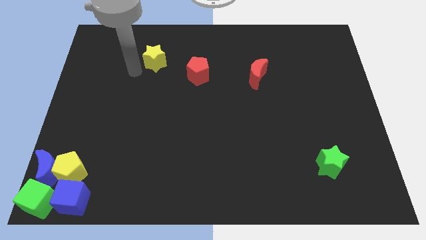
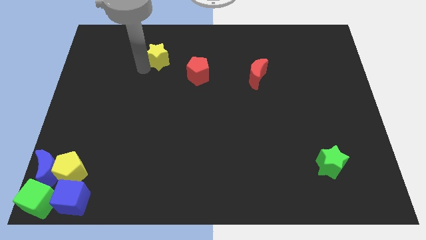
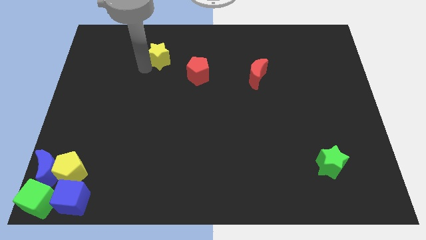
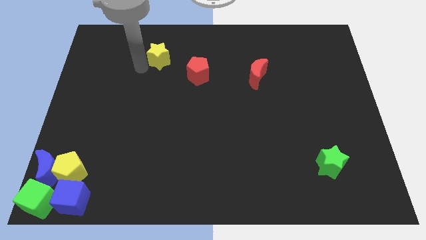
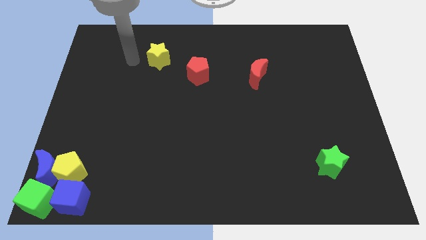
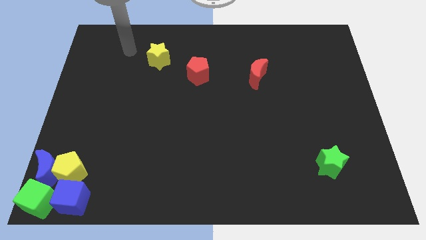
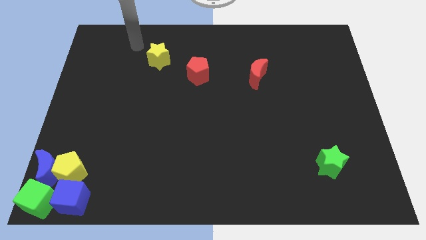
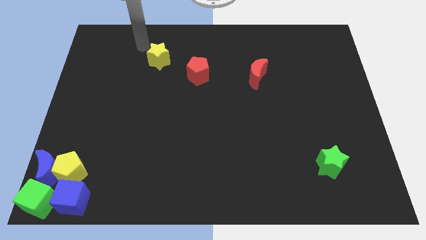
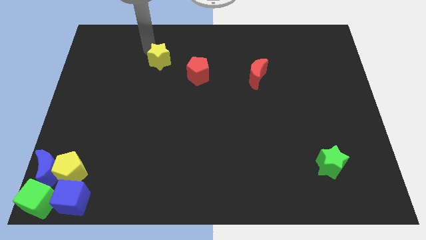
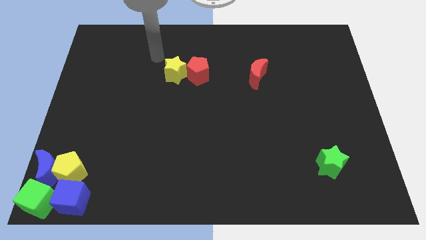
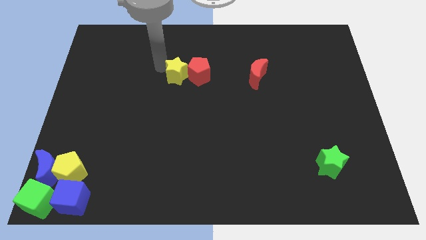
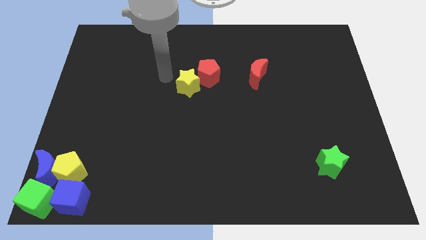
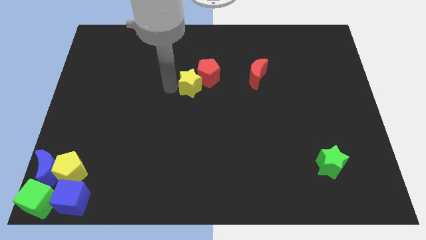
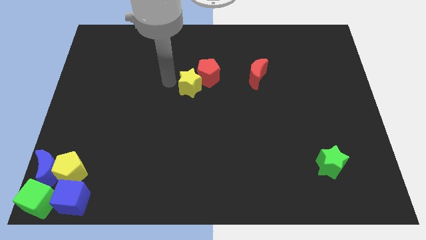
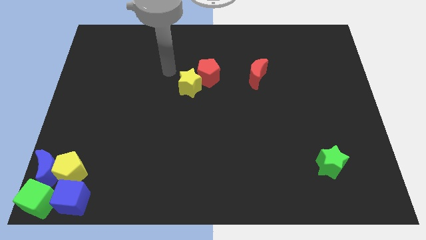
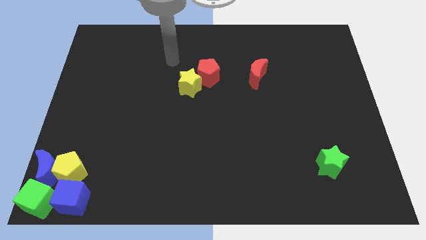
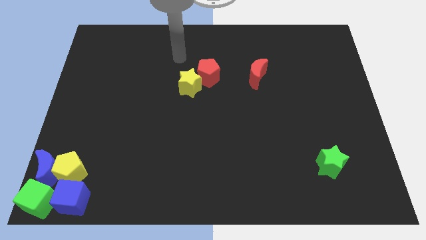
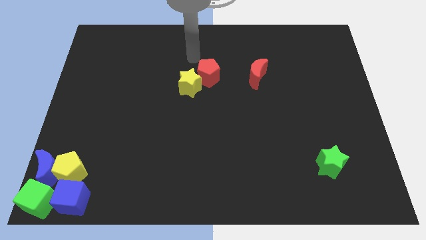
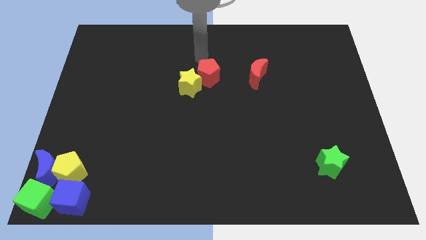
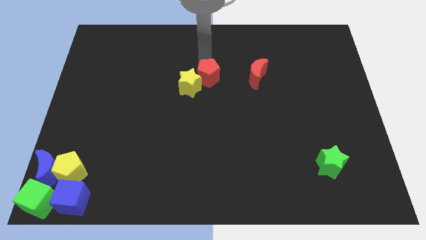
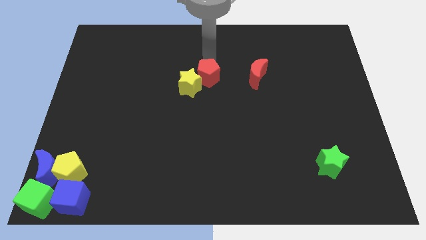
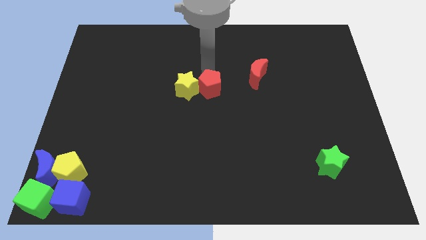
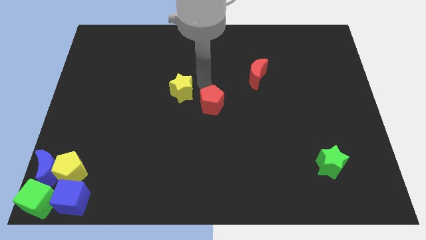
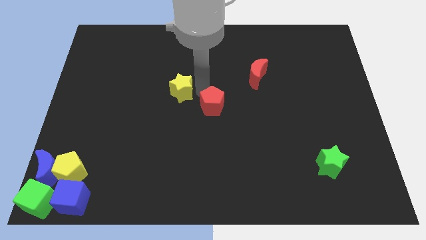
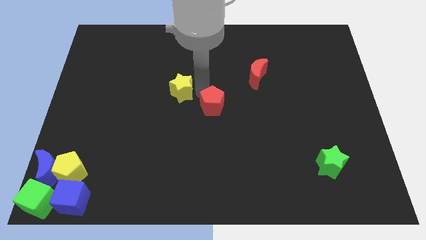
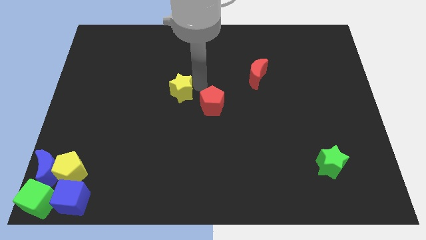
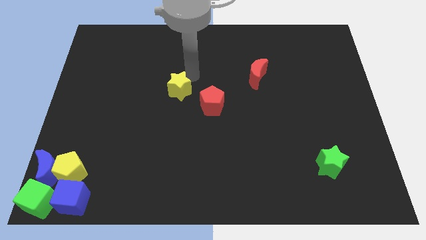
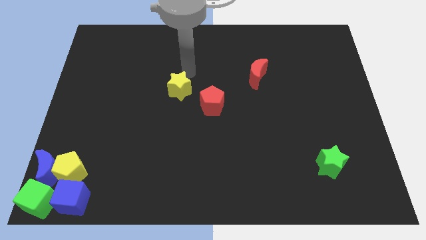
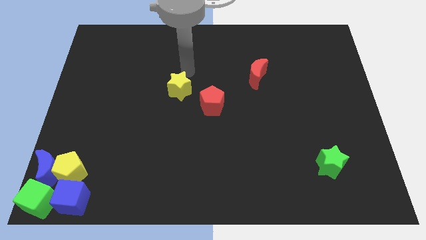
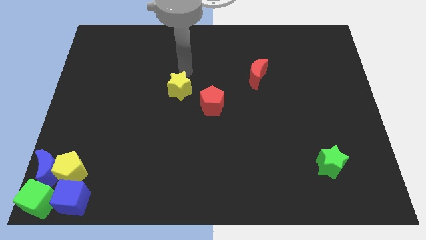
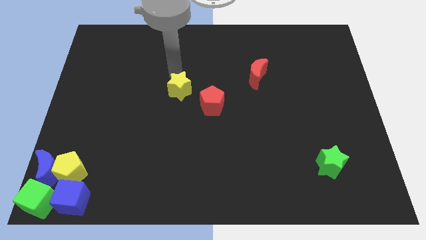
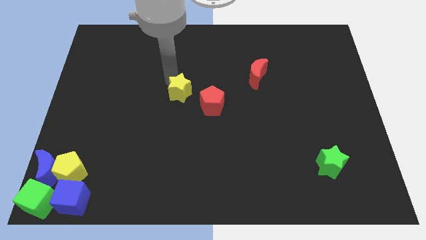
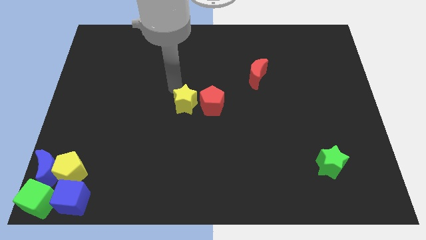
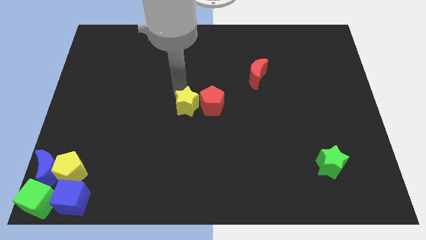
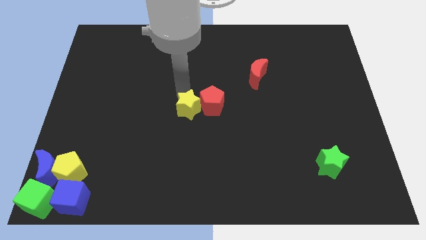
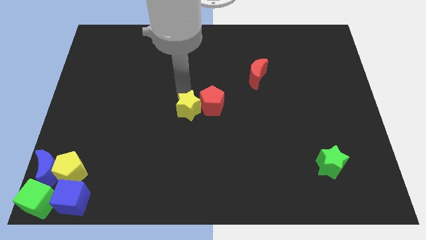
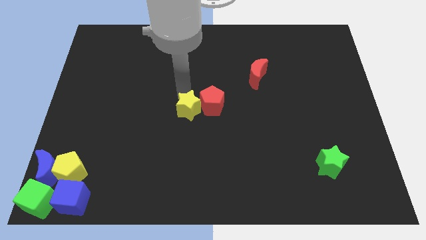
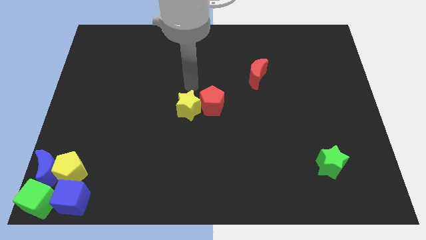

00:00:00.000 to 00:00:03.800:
move the yellow star and red pentagon to the center of the board

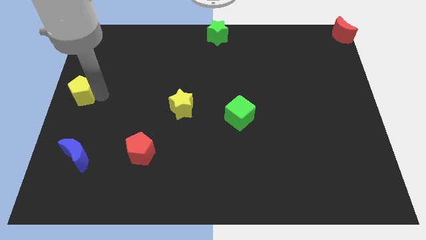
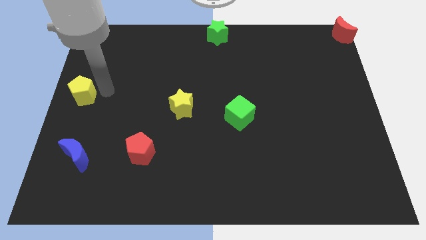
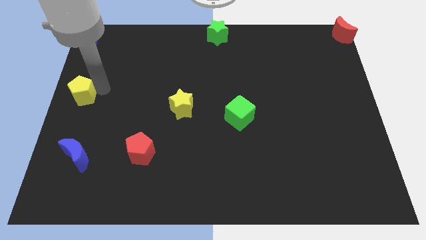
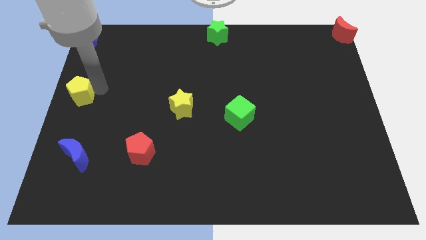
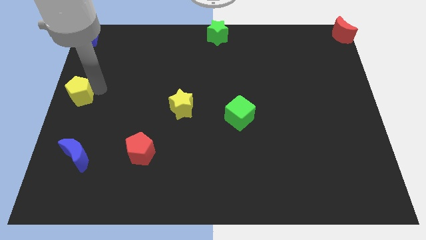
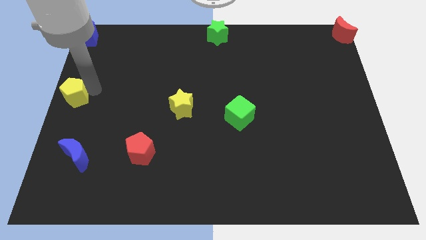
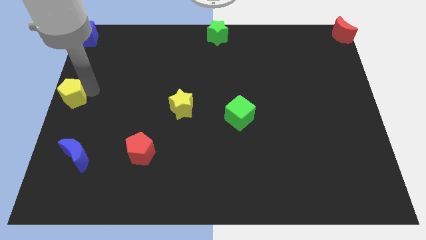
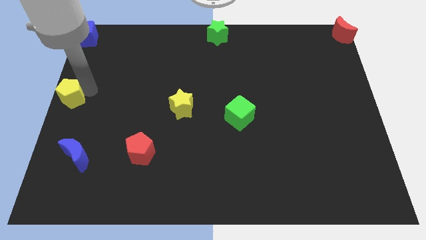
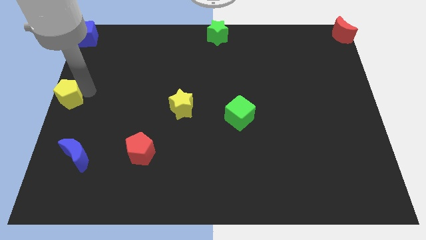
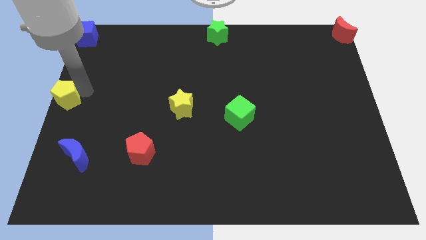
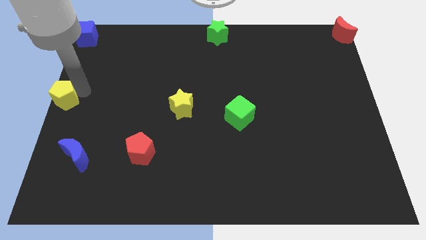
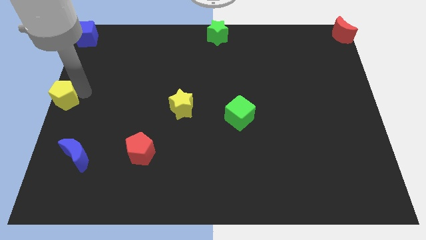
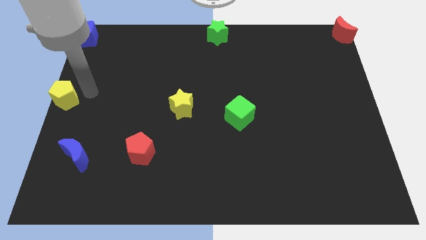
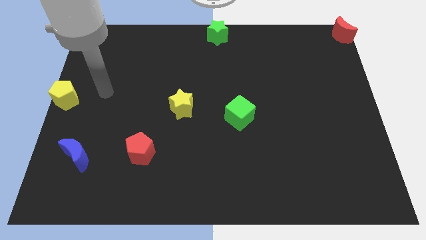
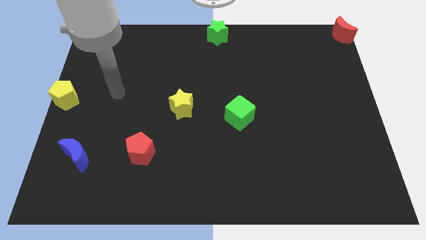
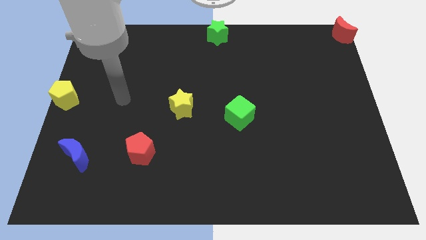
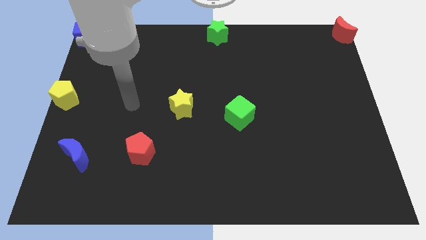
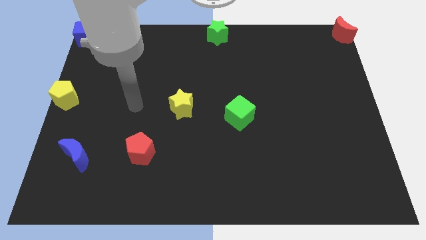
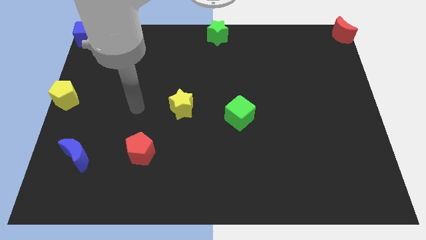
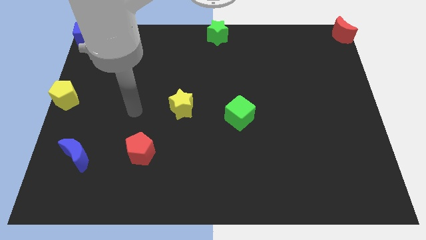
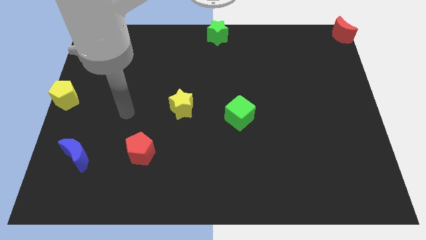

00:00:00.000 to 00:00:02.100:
push the yellow pentagon to the left center of the board

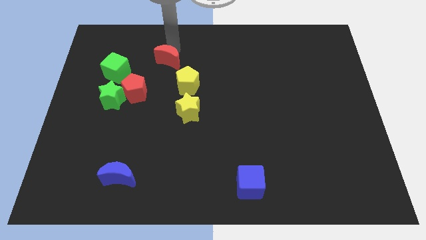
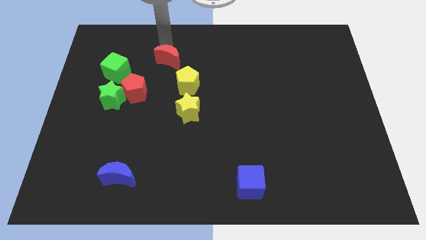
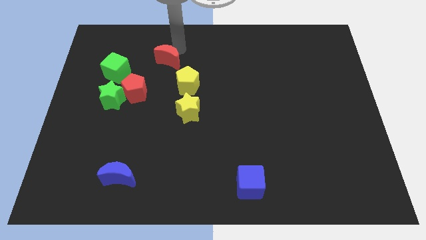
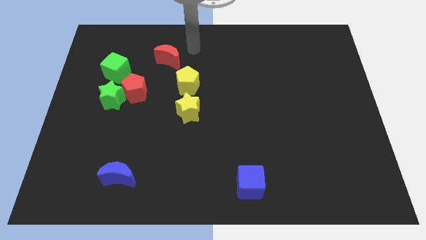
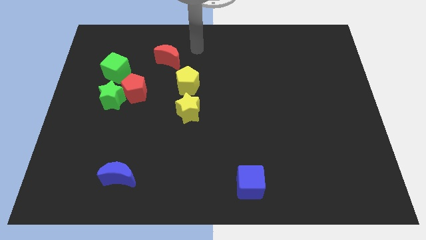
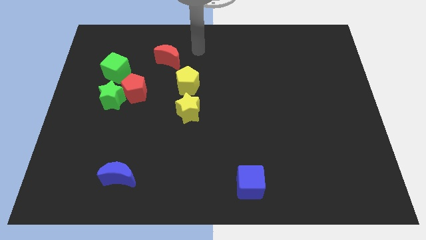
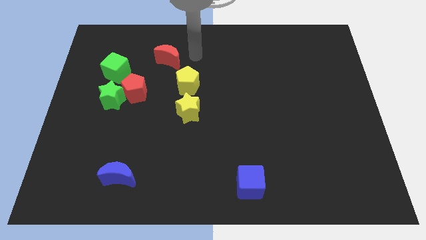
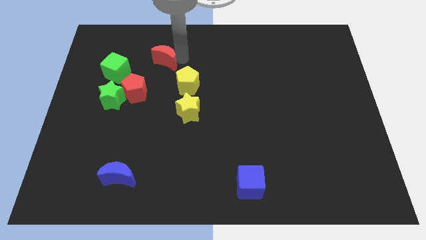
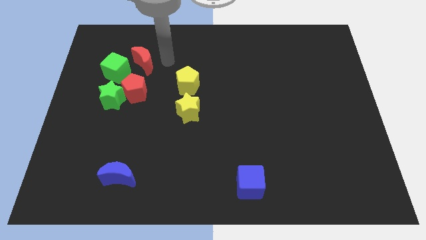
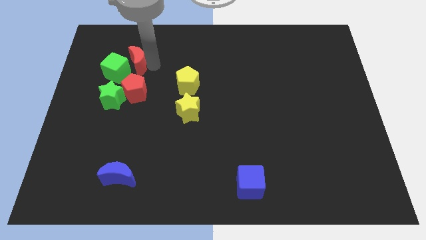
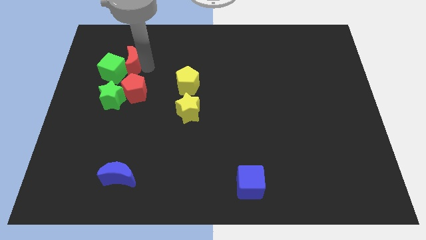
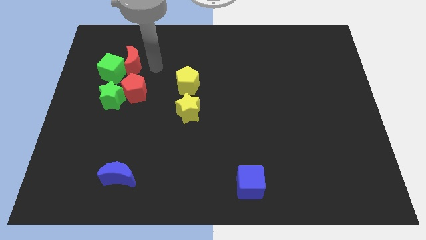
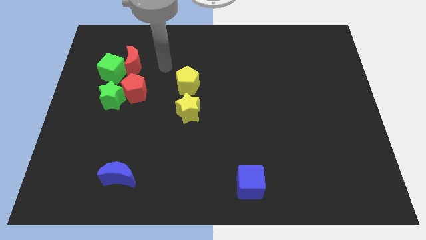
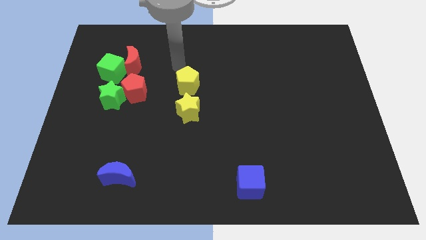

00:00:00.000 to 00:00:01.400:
move red moon close to the green cube

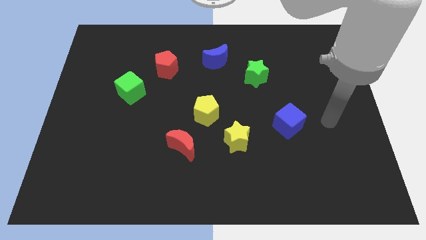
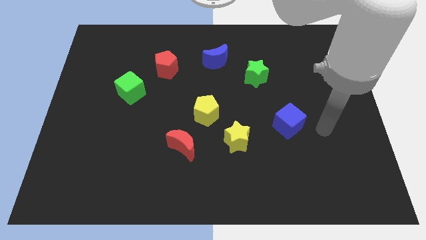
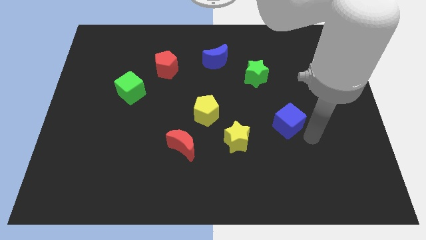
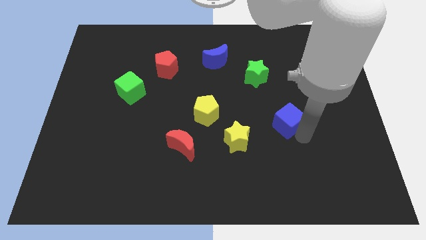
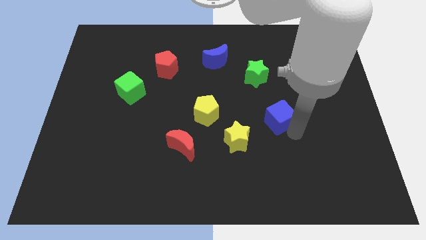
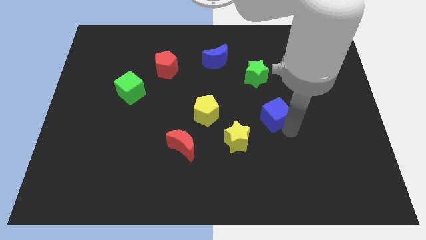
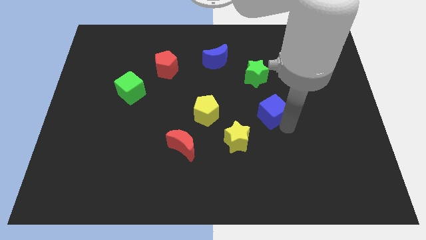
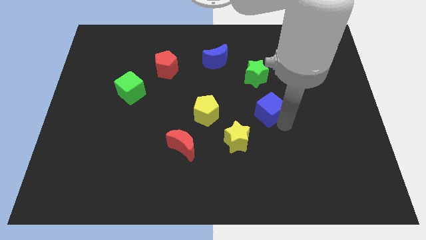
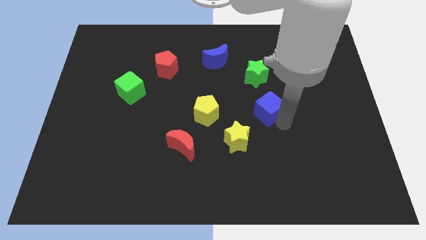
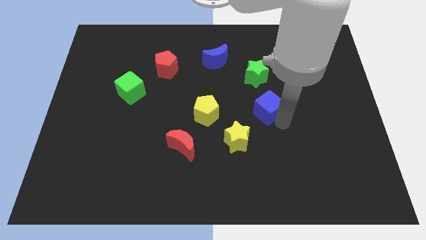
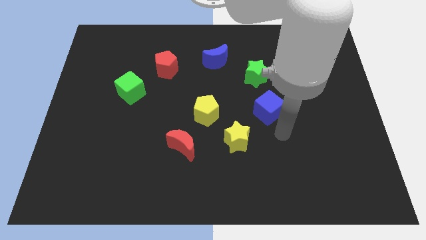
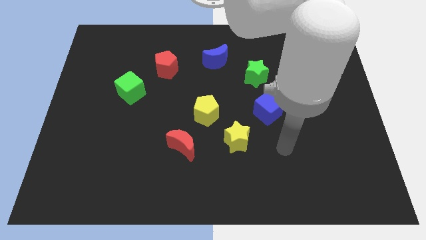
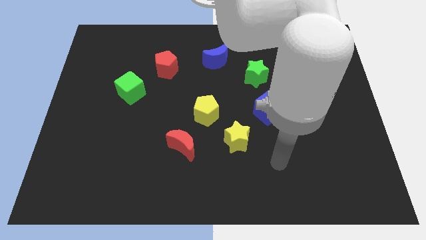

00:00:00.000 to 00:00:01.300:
place the blue cube to the right of the yellow pentagon

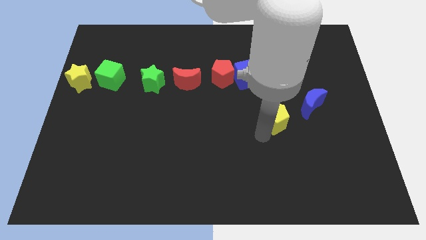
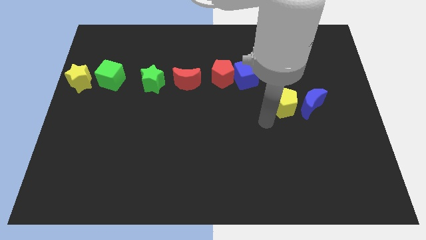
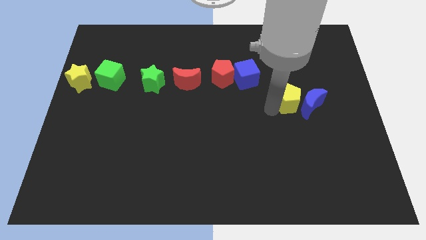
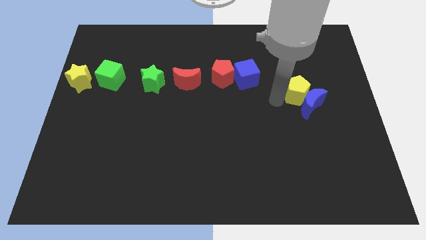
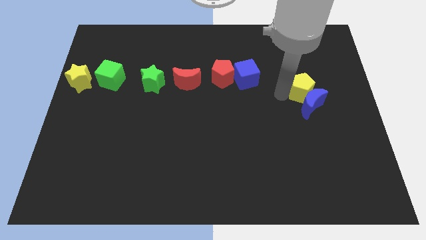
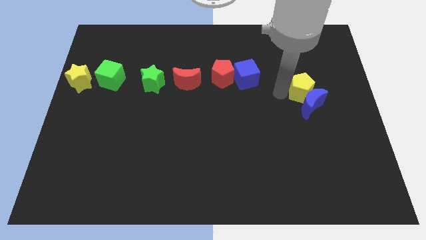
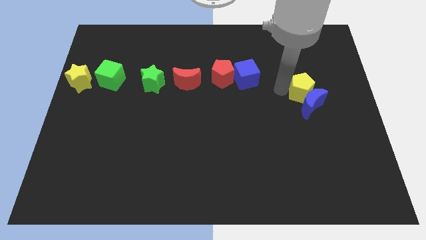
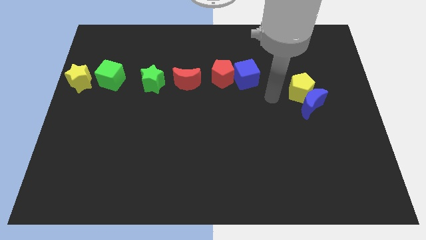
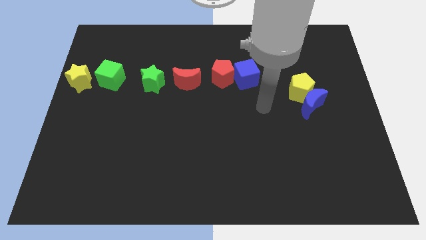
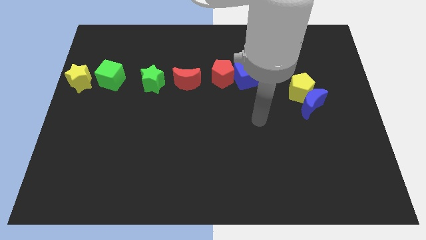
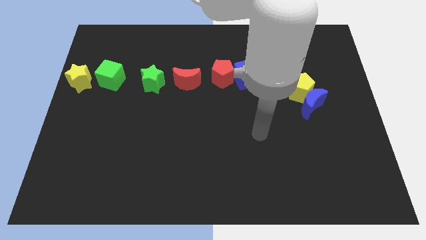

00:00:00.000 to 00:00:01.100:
slide yellow pentagon on top left of blue moon
